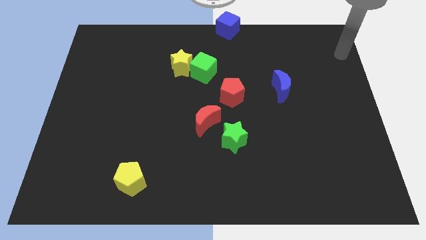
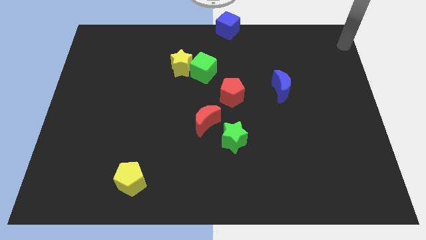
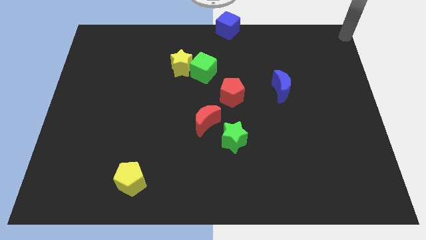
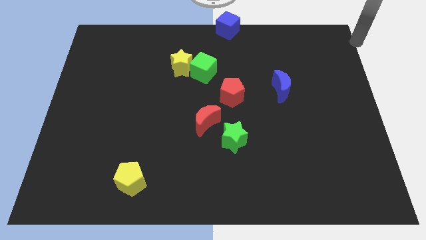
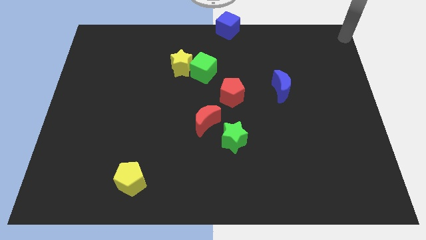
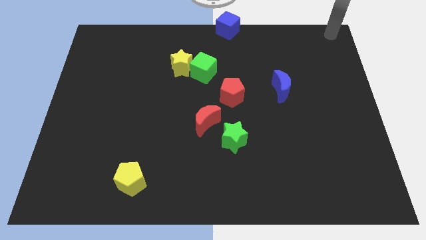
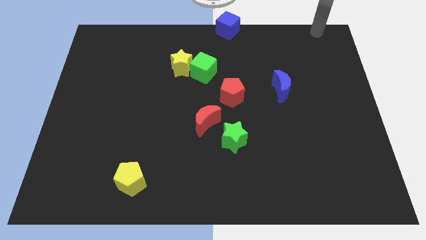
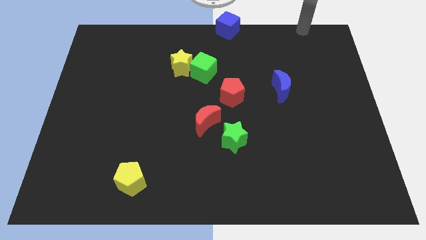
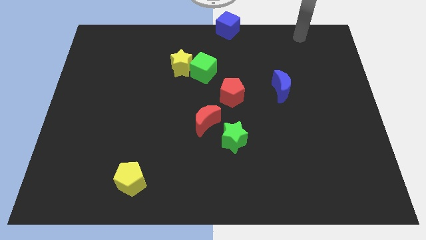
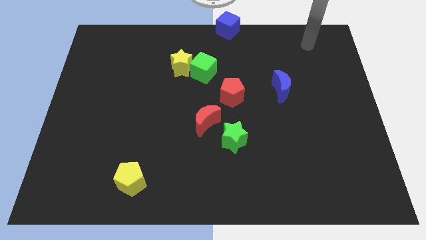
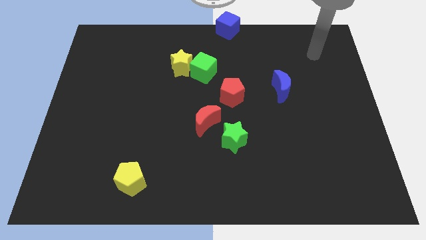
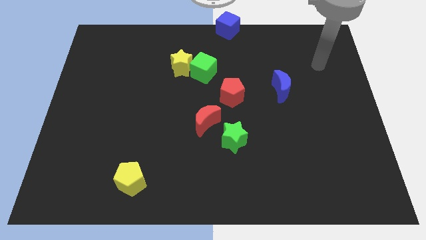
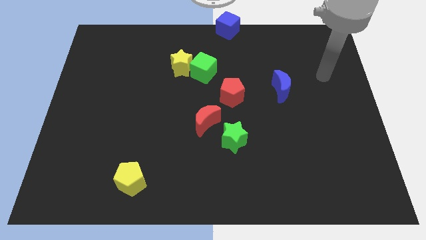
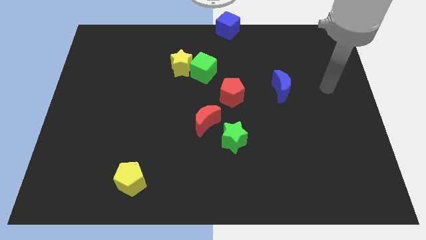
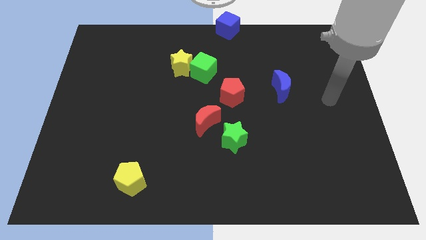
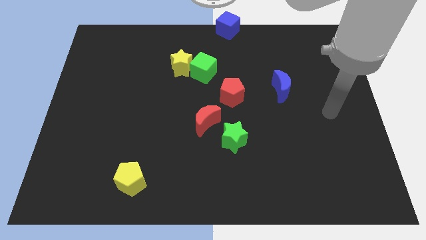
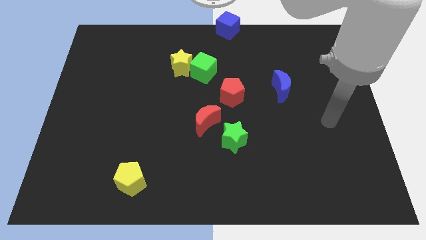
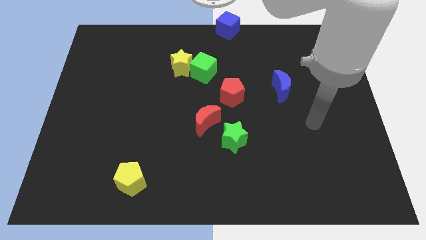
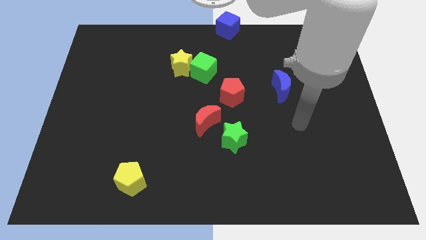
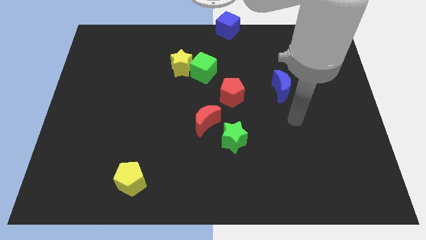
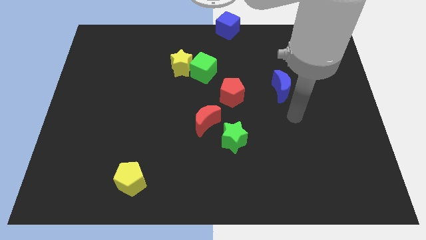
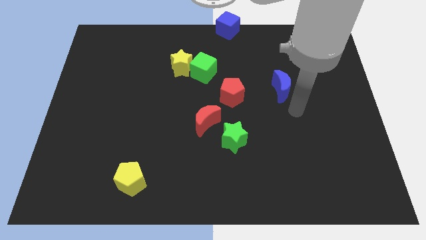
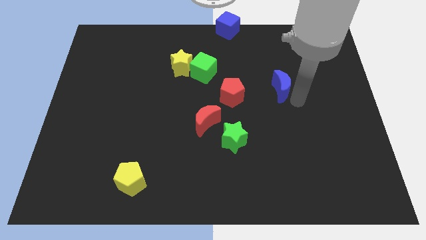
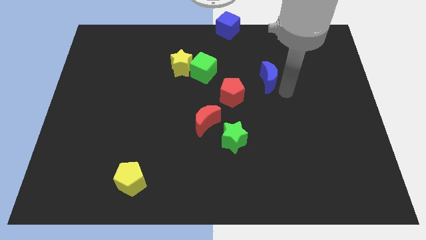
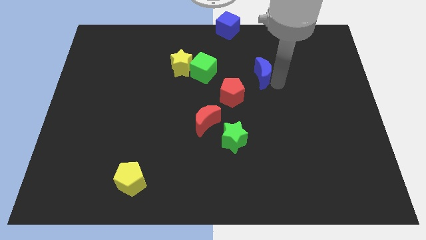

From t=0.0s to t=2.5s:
slightly move the blue crescent to the top of the board

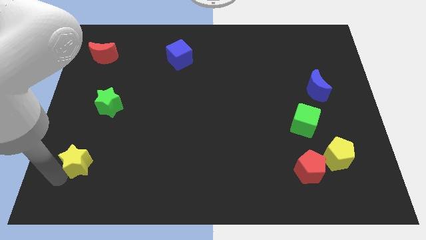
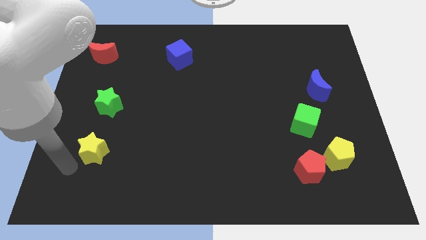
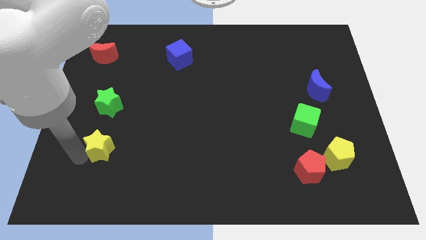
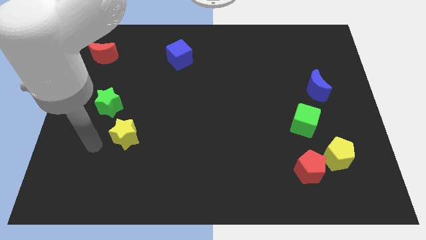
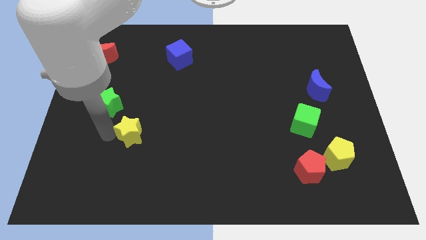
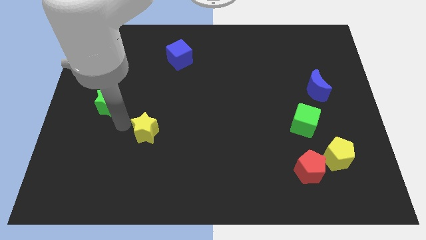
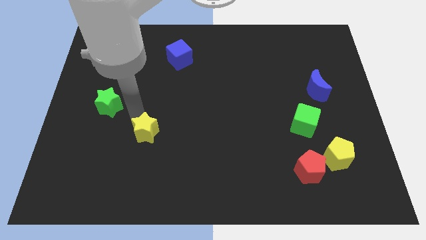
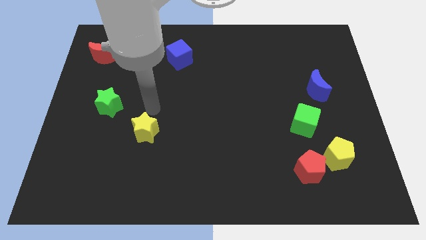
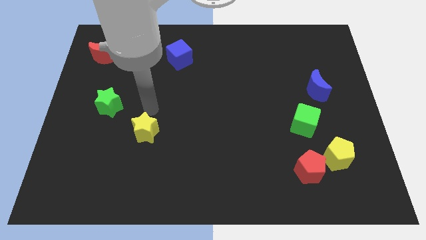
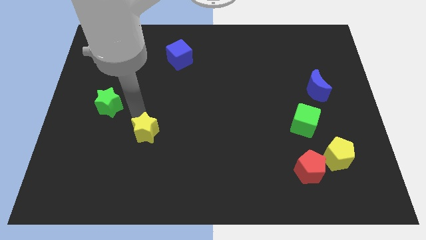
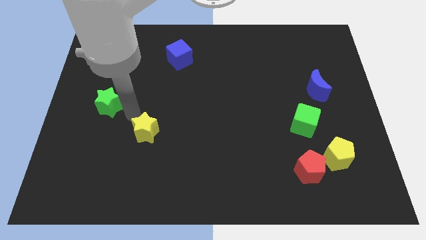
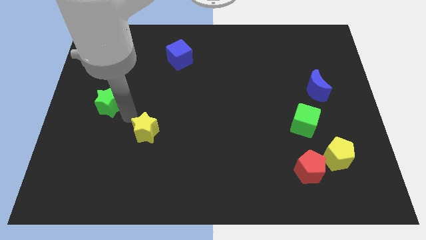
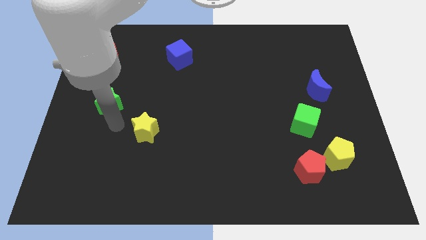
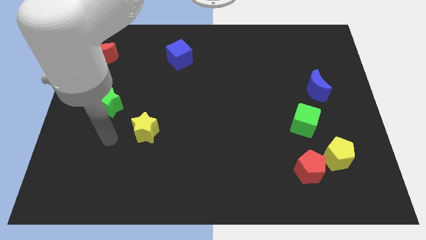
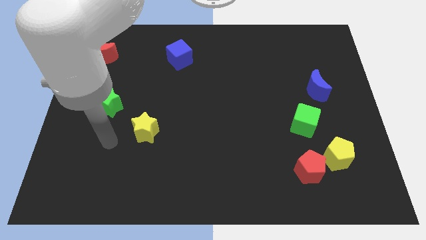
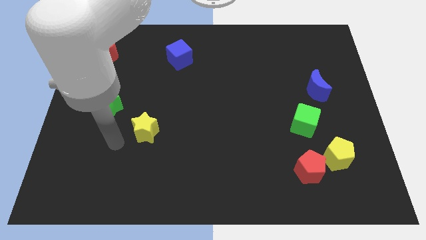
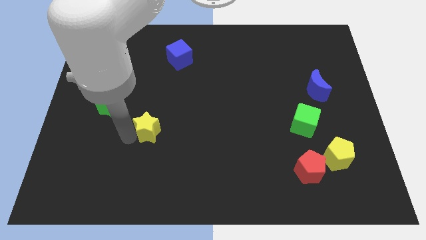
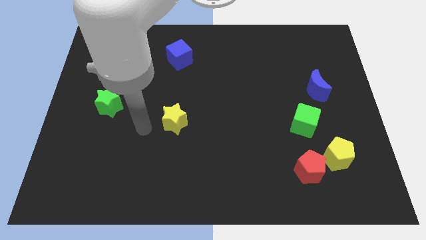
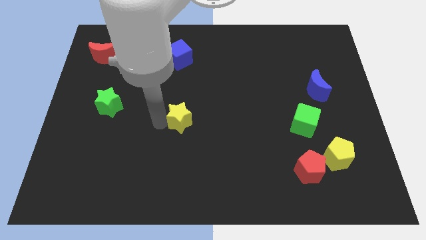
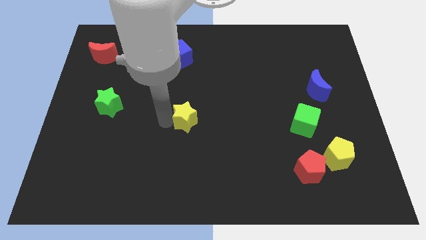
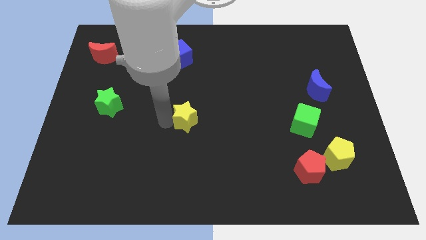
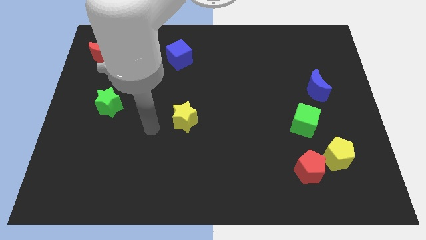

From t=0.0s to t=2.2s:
push the yellow star to the right side of the green star

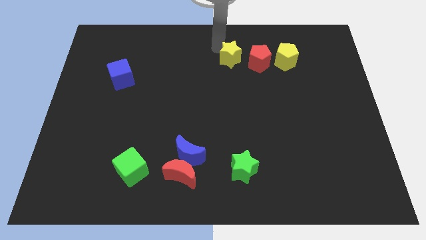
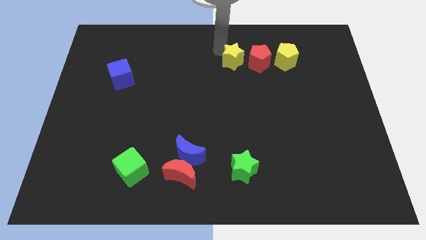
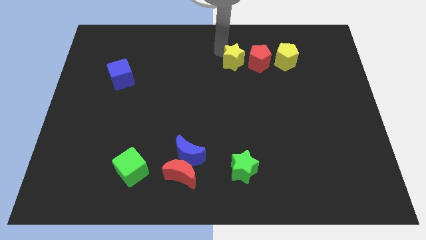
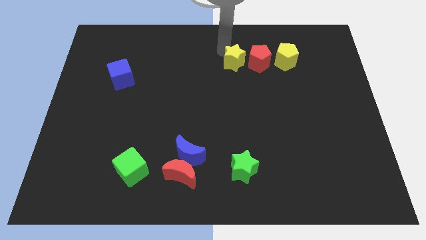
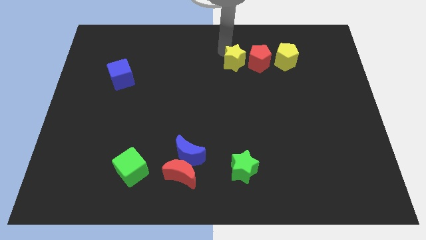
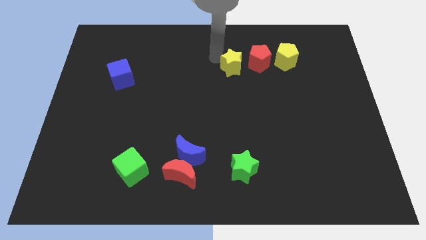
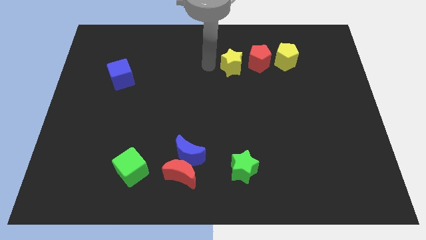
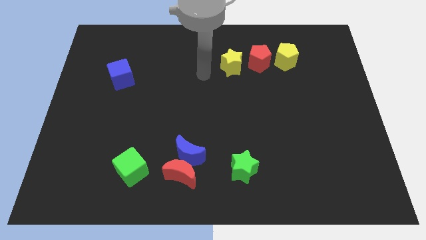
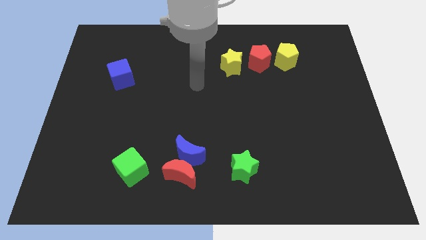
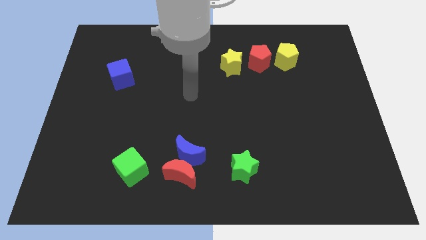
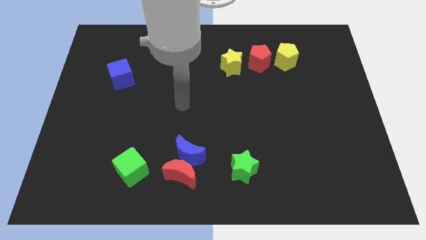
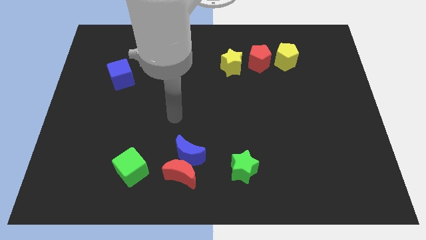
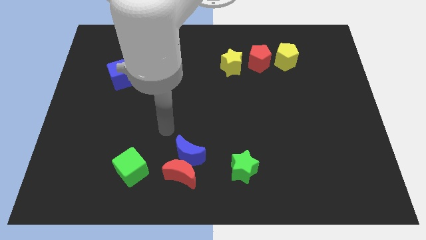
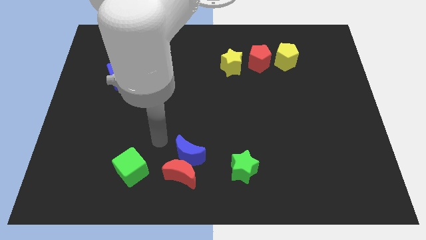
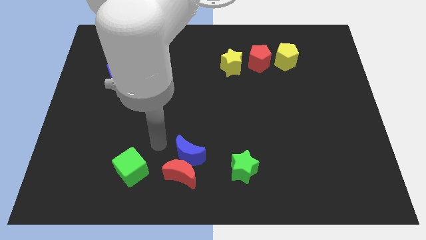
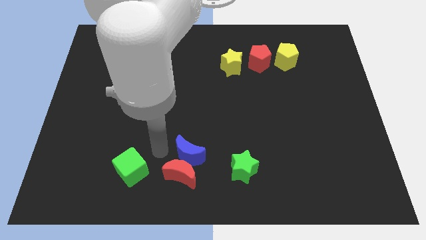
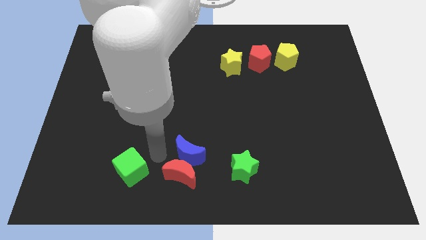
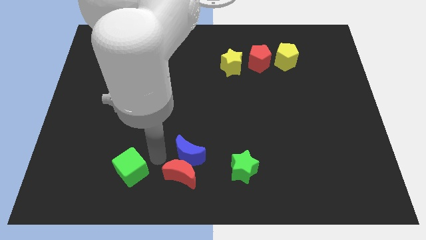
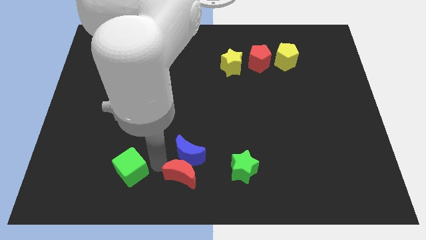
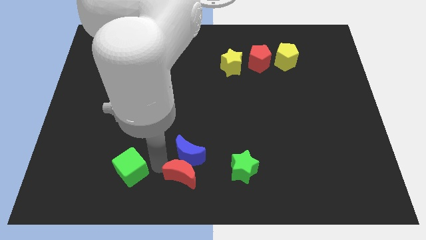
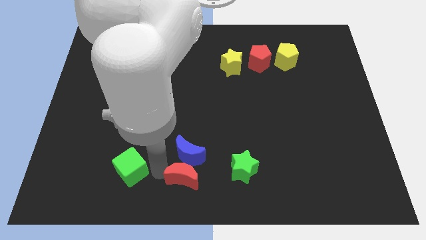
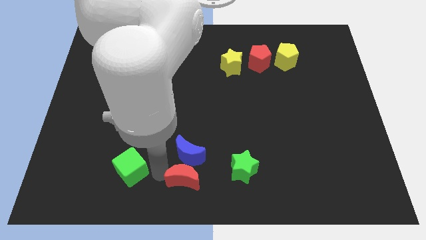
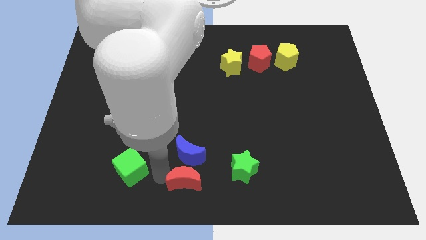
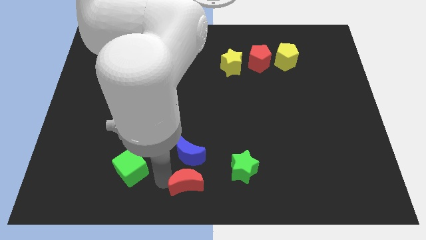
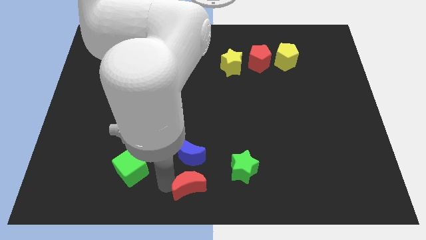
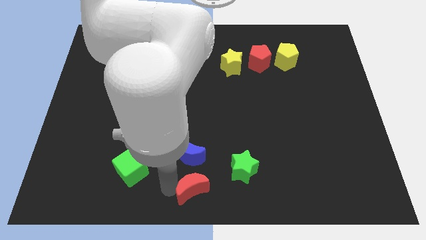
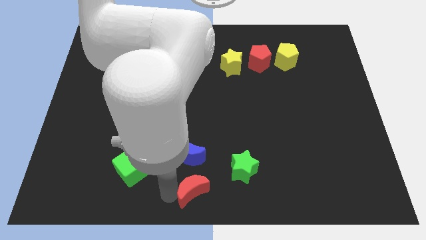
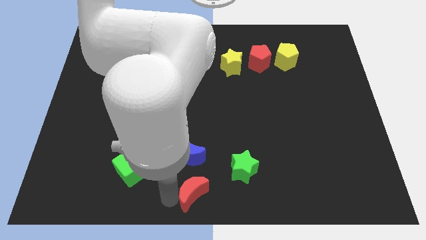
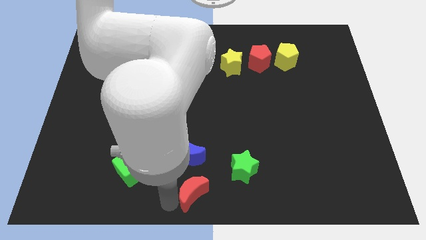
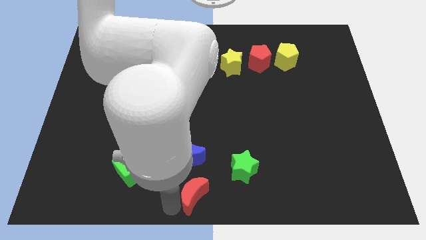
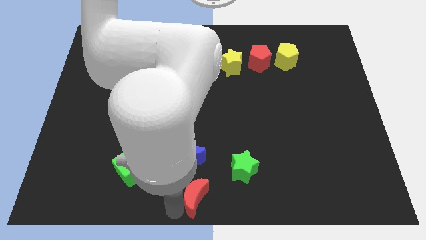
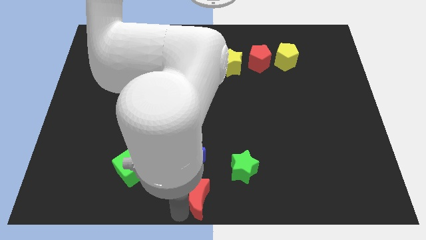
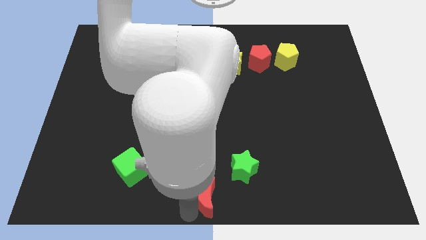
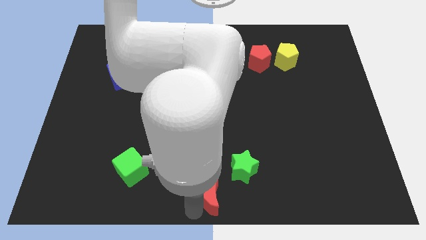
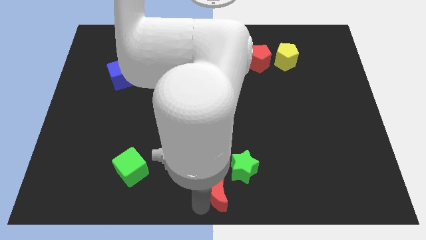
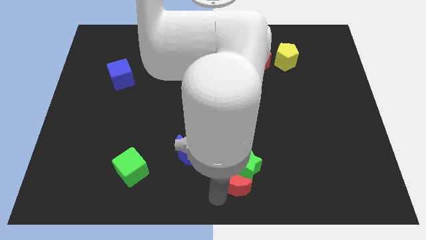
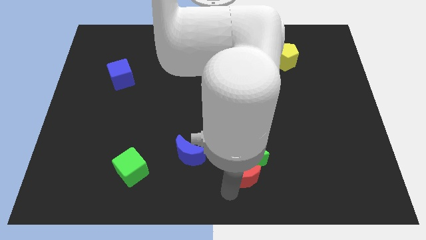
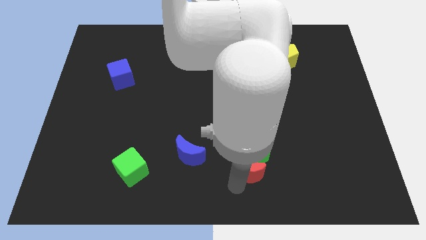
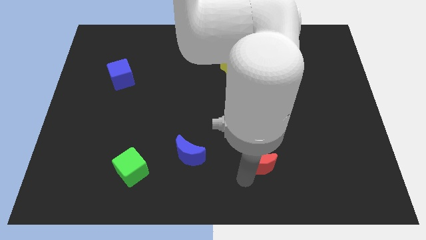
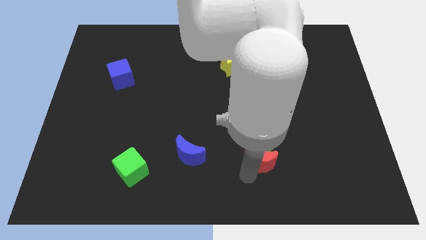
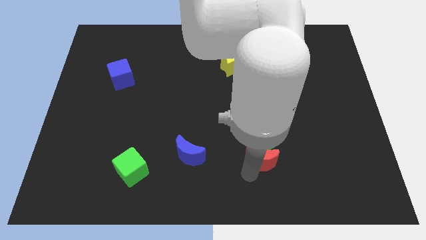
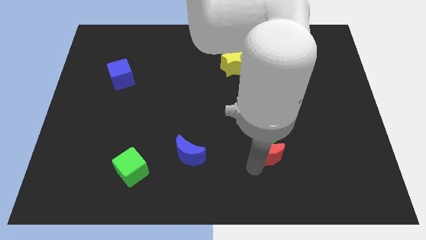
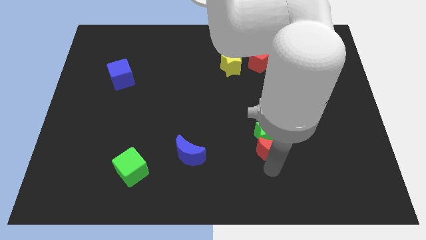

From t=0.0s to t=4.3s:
push the red crescent into the green star
